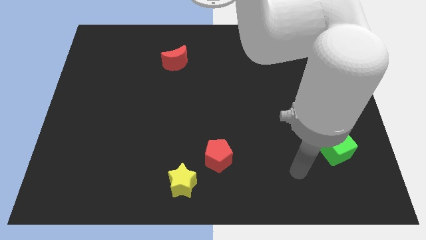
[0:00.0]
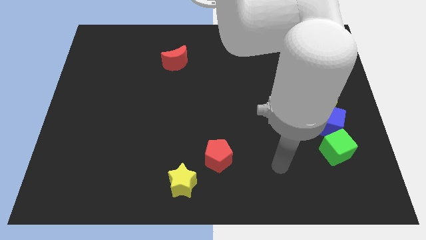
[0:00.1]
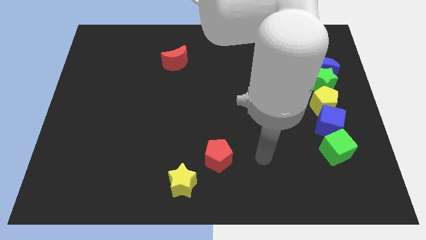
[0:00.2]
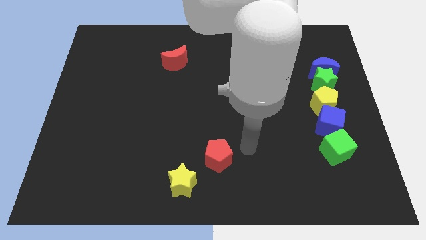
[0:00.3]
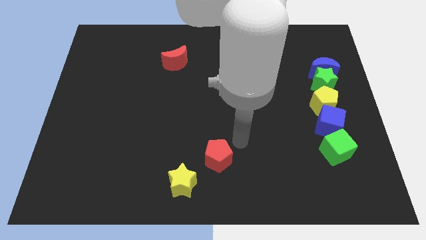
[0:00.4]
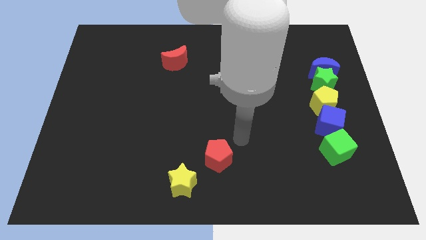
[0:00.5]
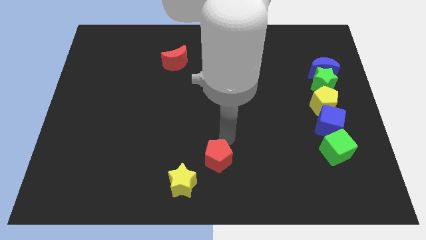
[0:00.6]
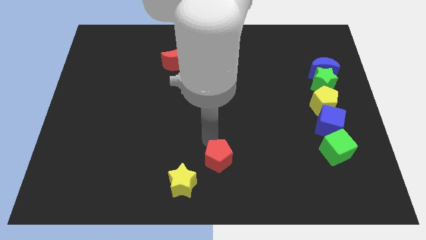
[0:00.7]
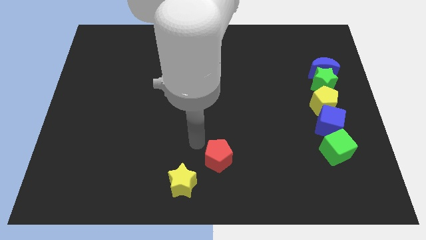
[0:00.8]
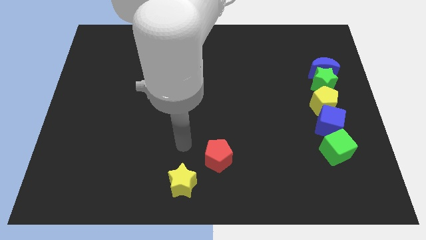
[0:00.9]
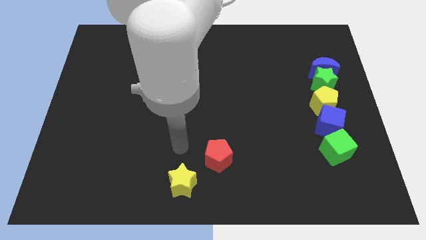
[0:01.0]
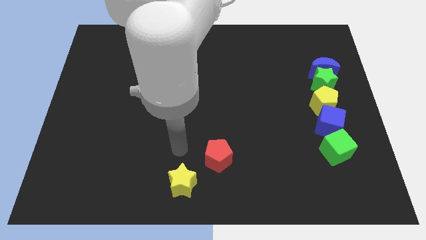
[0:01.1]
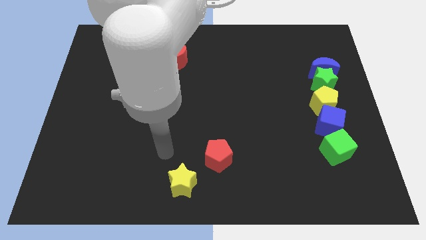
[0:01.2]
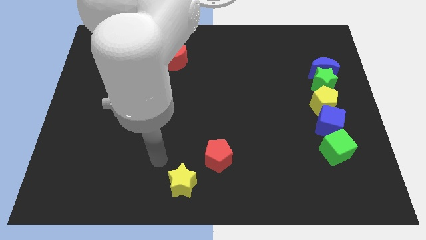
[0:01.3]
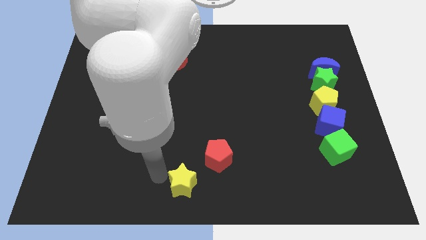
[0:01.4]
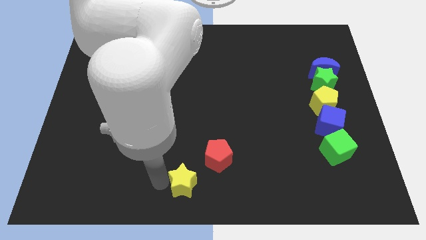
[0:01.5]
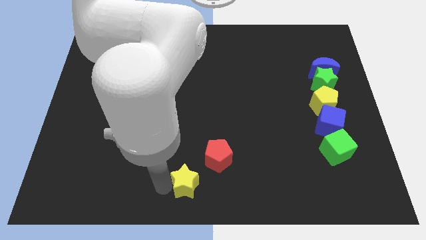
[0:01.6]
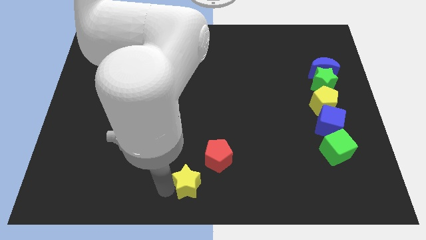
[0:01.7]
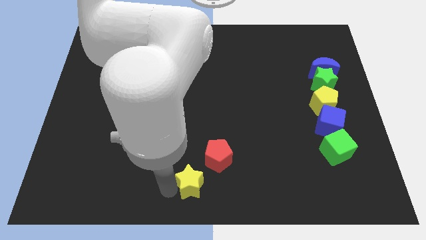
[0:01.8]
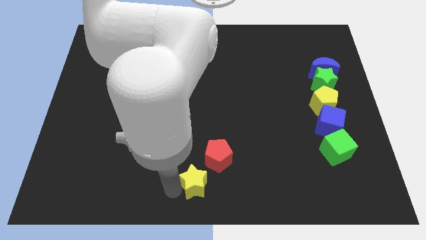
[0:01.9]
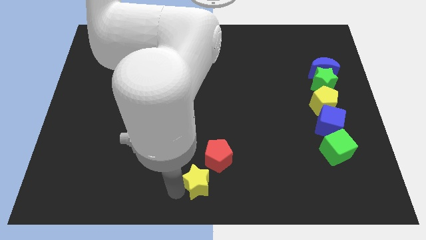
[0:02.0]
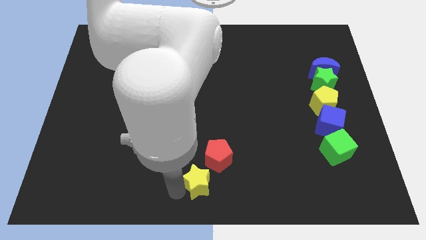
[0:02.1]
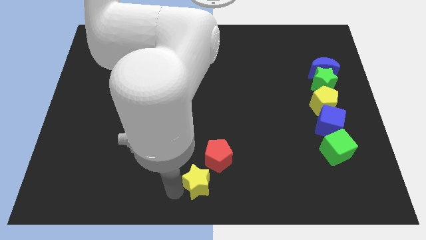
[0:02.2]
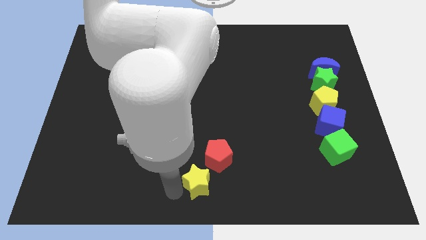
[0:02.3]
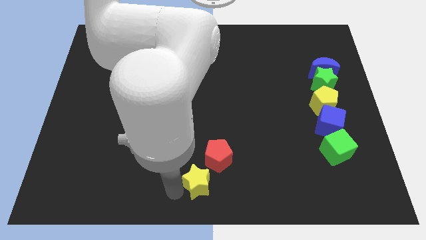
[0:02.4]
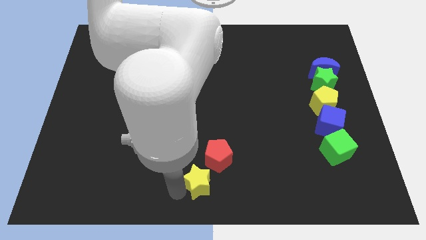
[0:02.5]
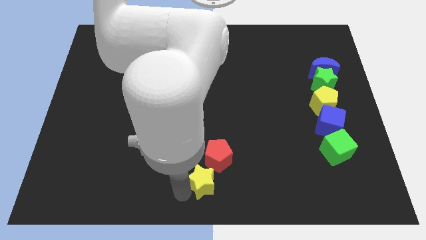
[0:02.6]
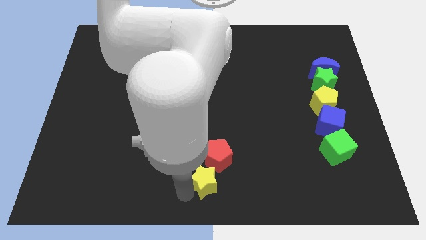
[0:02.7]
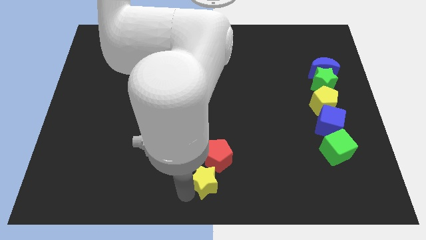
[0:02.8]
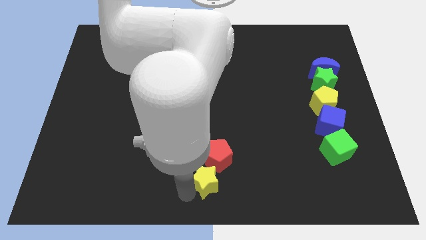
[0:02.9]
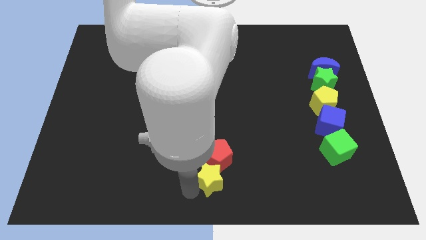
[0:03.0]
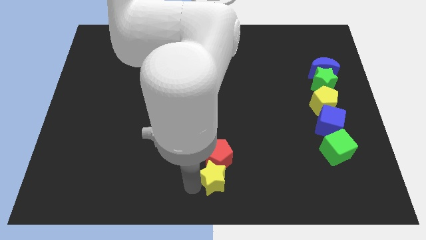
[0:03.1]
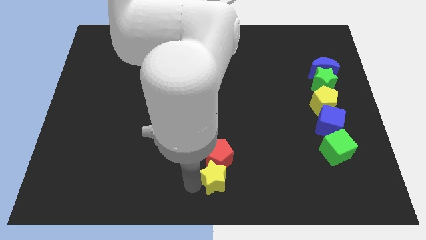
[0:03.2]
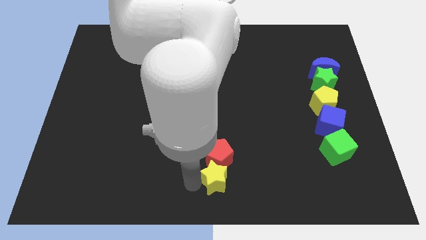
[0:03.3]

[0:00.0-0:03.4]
push the yellow star below the red pentagon

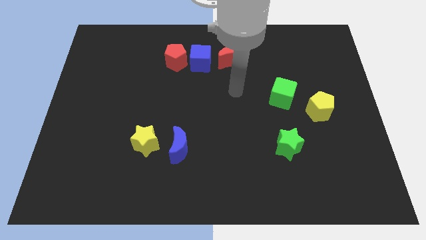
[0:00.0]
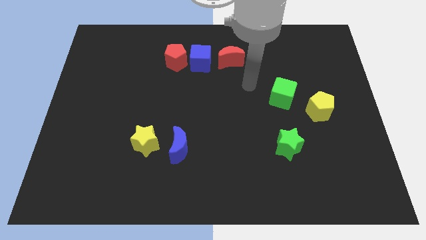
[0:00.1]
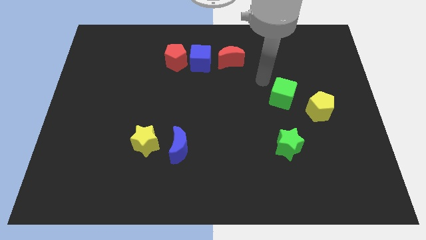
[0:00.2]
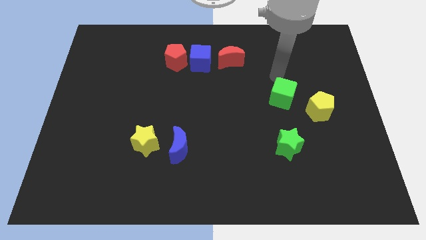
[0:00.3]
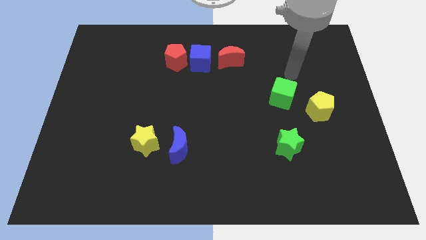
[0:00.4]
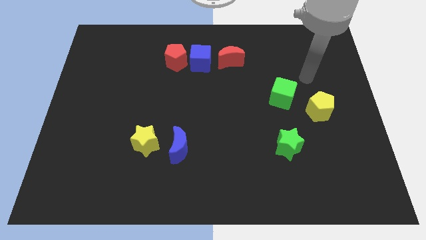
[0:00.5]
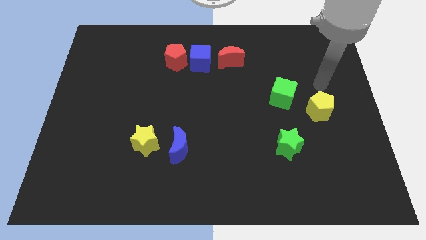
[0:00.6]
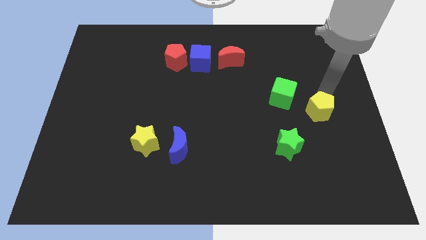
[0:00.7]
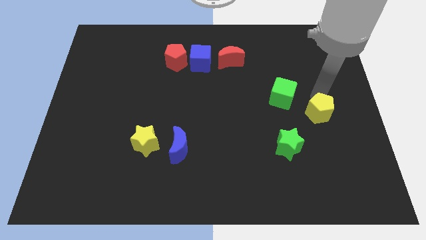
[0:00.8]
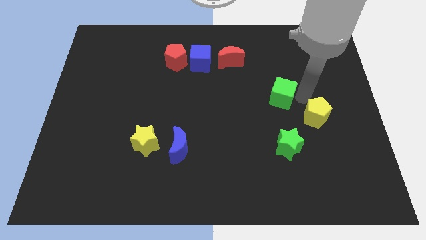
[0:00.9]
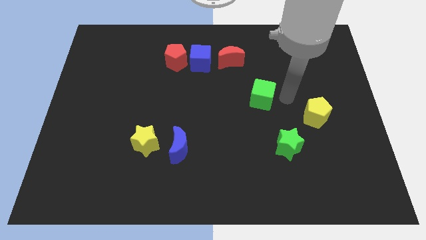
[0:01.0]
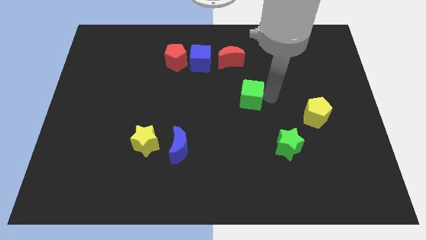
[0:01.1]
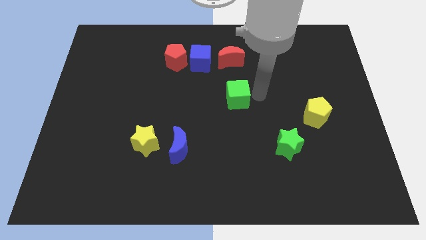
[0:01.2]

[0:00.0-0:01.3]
place the green cube to the bottom side of the red moon

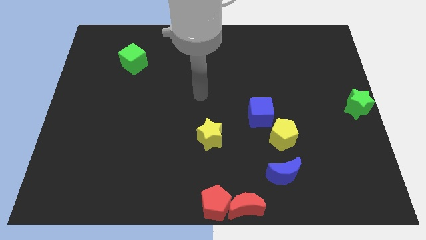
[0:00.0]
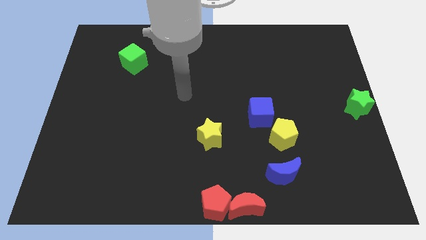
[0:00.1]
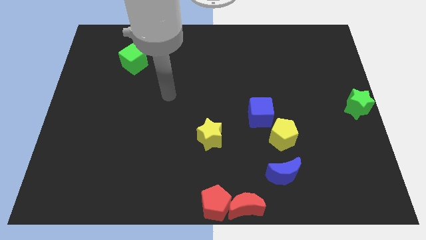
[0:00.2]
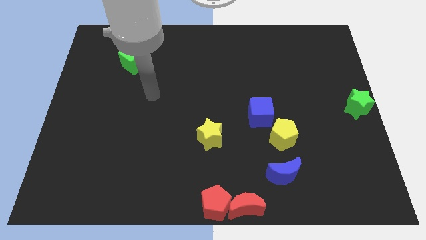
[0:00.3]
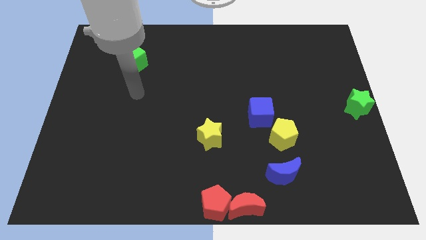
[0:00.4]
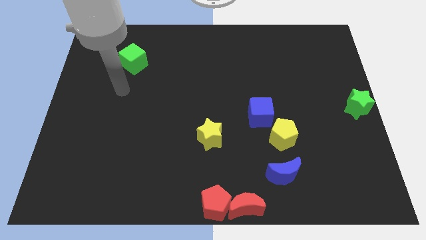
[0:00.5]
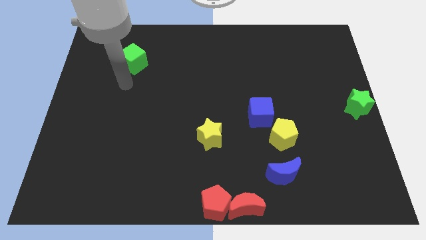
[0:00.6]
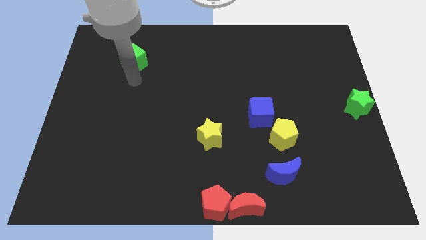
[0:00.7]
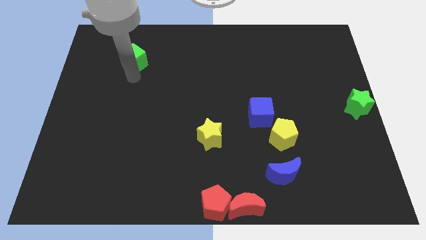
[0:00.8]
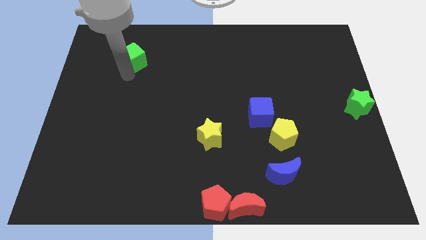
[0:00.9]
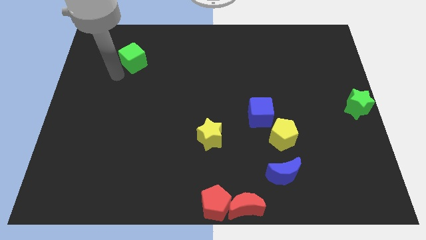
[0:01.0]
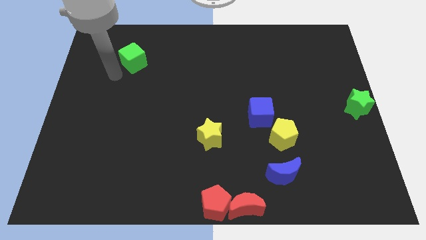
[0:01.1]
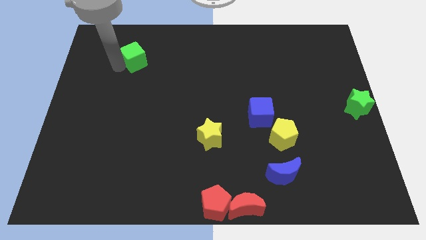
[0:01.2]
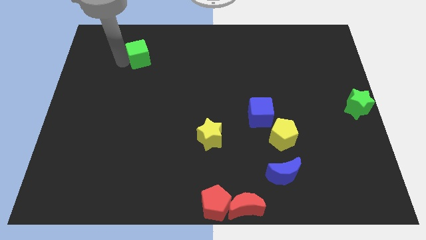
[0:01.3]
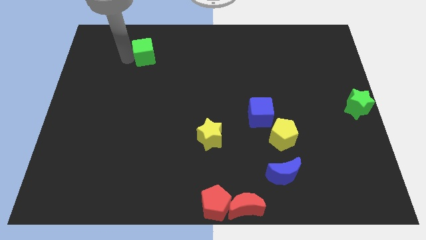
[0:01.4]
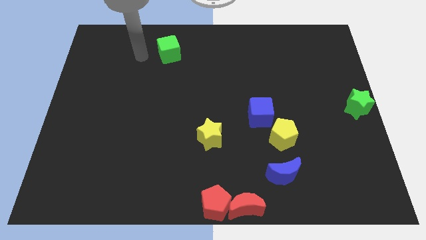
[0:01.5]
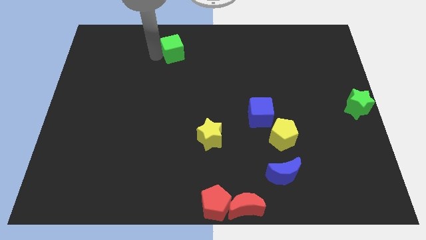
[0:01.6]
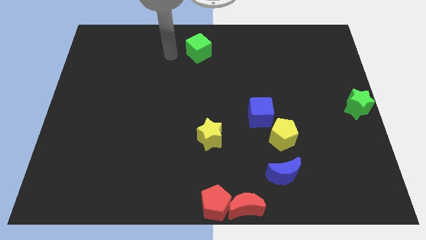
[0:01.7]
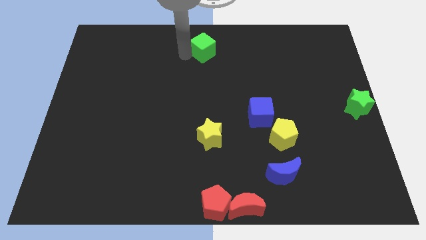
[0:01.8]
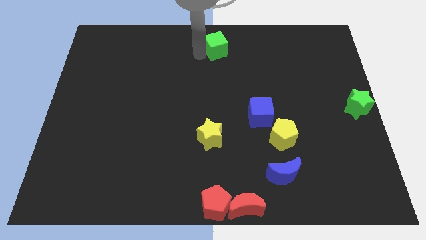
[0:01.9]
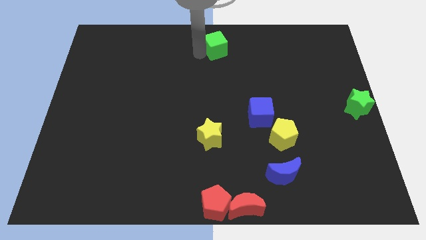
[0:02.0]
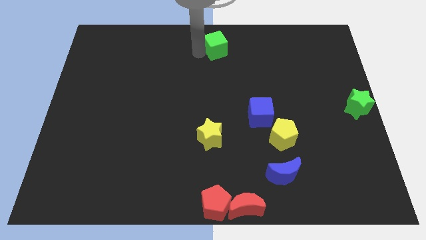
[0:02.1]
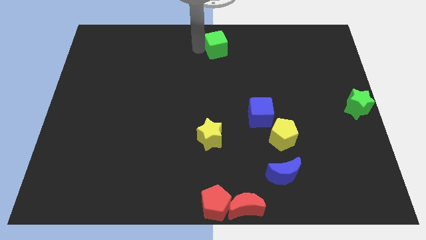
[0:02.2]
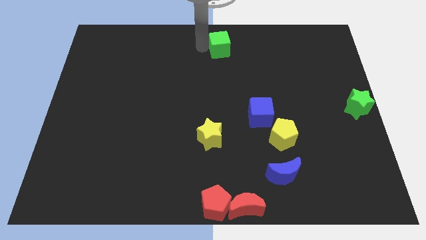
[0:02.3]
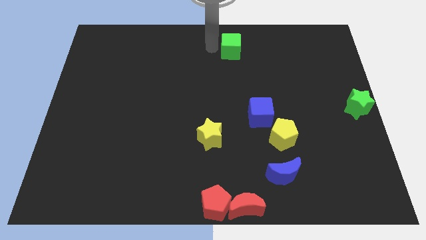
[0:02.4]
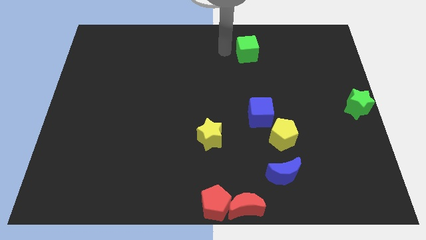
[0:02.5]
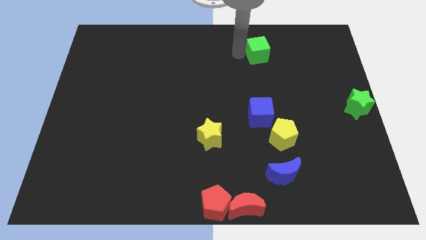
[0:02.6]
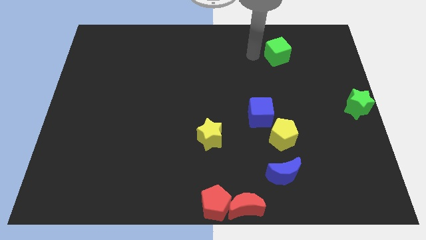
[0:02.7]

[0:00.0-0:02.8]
place the green cube above the blue cube

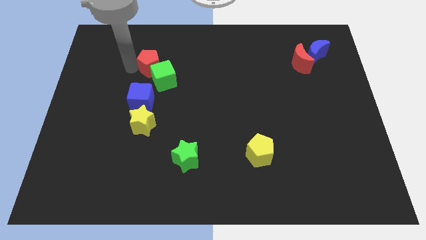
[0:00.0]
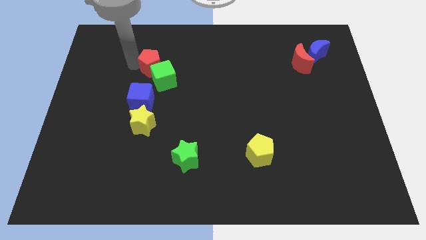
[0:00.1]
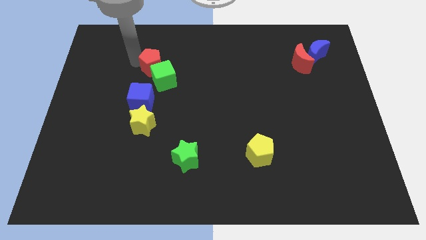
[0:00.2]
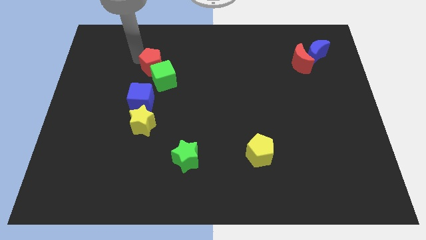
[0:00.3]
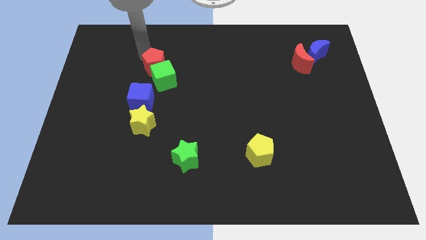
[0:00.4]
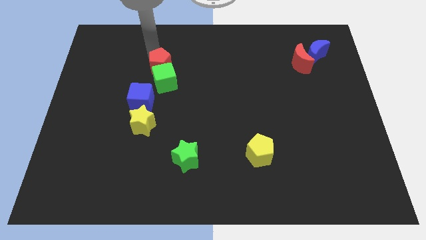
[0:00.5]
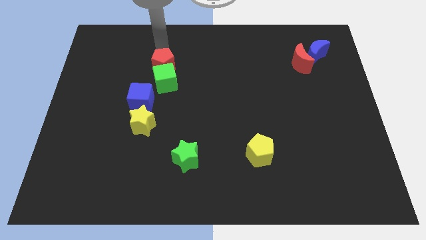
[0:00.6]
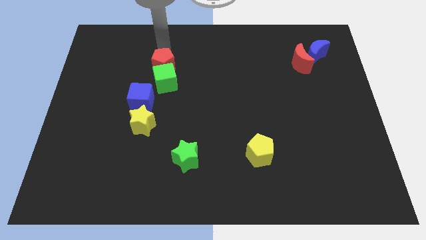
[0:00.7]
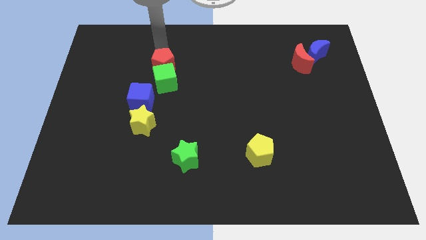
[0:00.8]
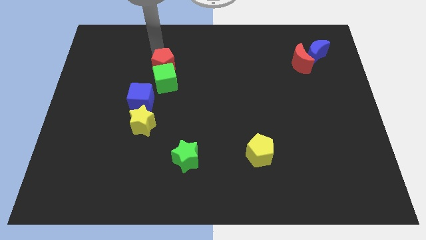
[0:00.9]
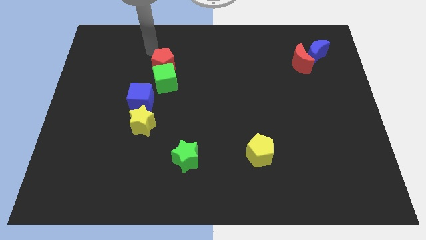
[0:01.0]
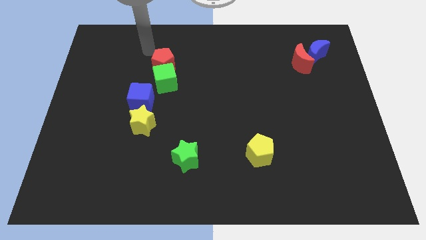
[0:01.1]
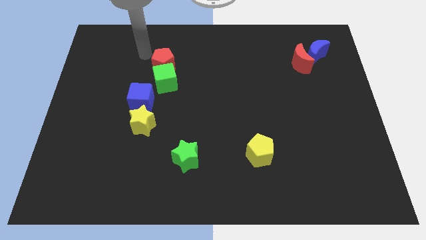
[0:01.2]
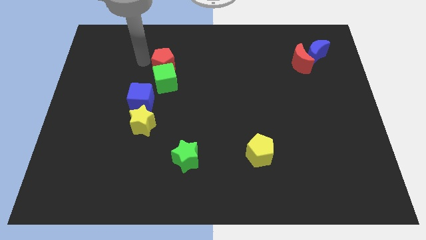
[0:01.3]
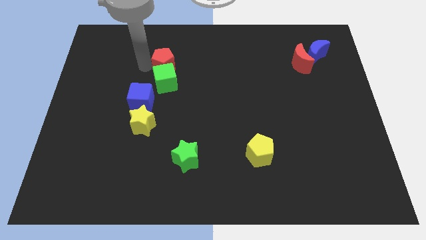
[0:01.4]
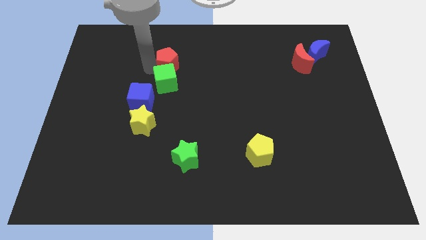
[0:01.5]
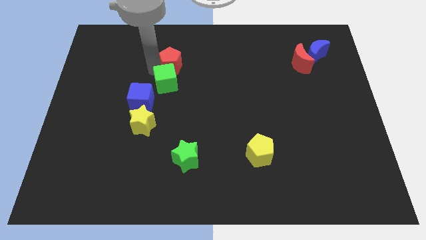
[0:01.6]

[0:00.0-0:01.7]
put the red pentagon above the green cube
